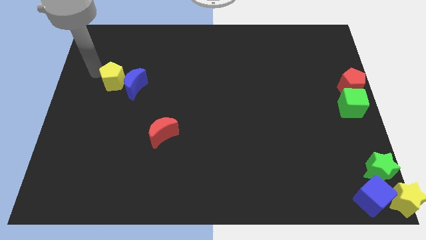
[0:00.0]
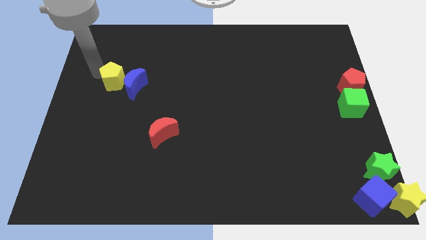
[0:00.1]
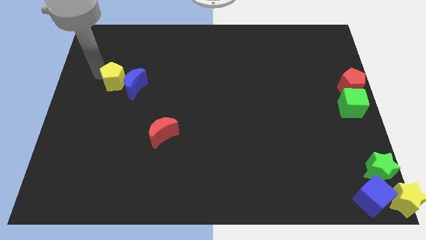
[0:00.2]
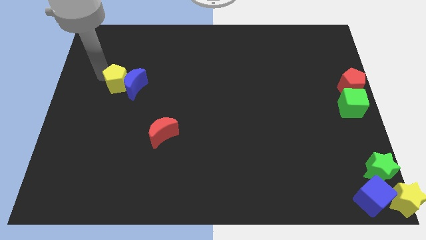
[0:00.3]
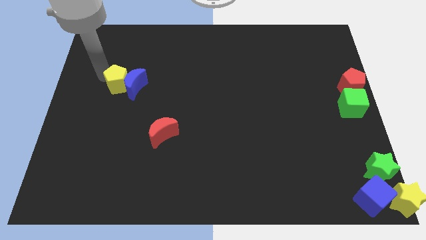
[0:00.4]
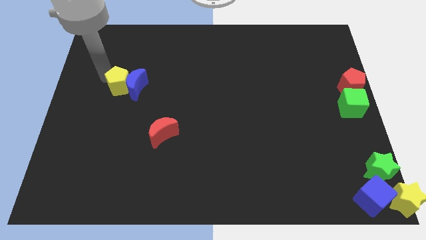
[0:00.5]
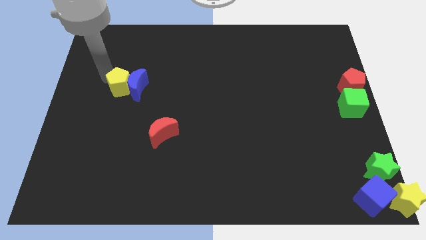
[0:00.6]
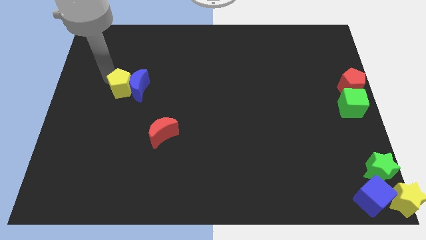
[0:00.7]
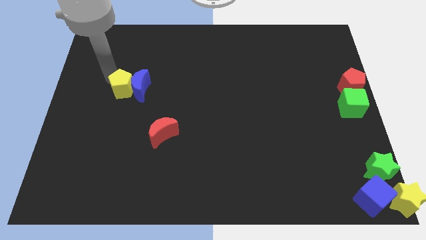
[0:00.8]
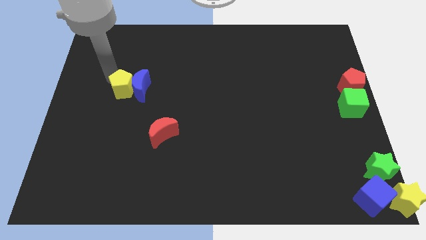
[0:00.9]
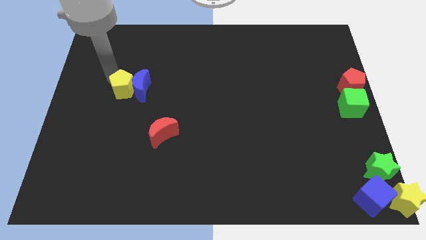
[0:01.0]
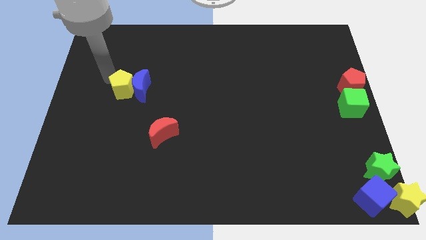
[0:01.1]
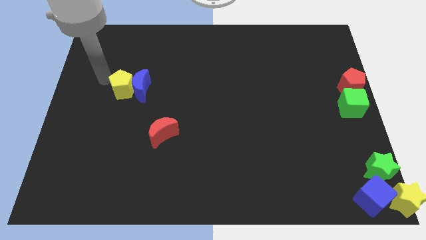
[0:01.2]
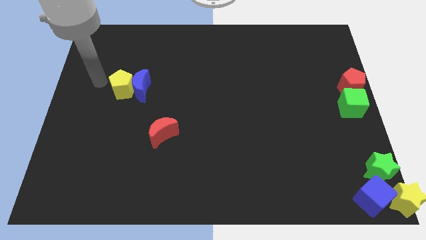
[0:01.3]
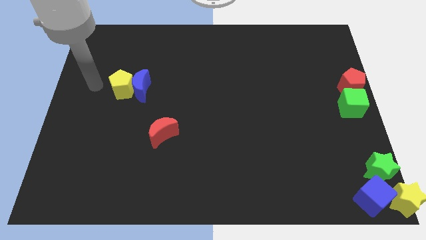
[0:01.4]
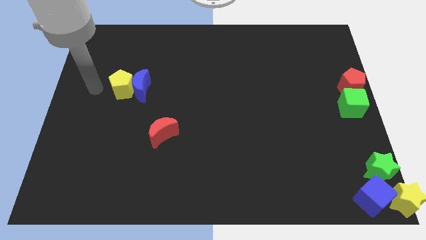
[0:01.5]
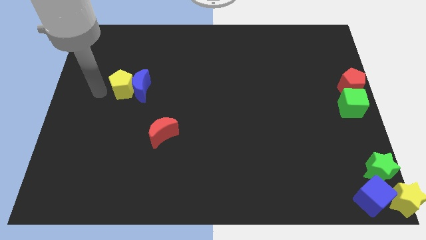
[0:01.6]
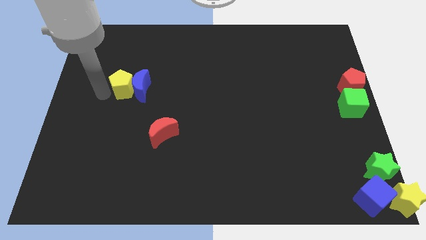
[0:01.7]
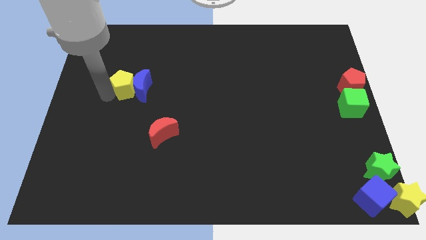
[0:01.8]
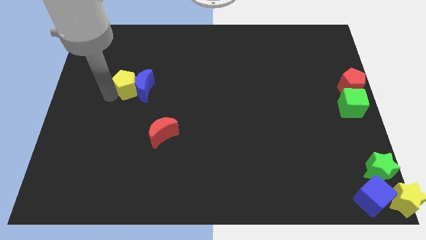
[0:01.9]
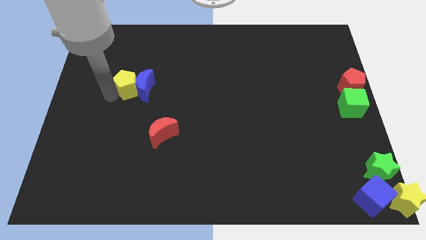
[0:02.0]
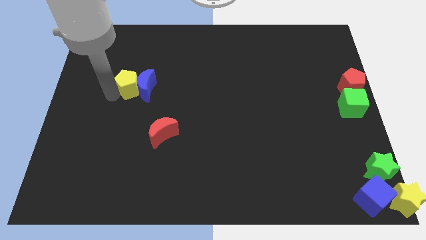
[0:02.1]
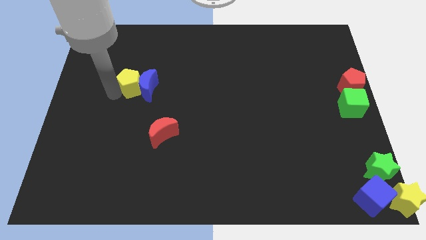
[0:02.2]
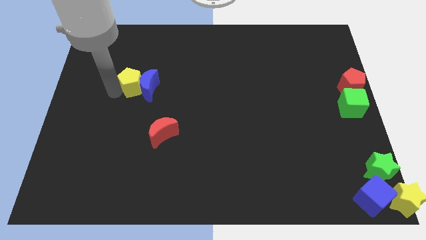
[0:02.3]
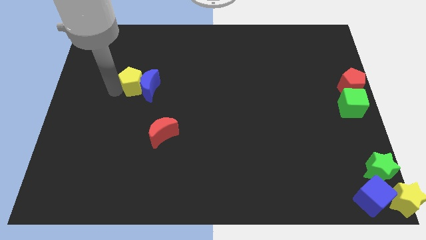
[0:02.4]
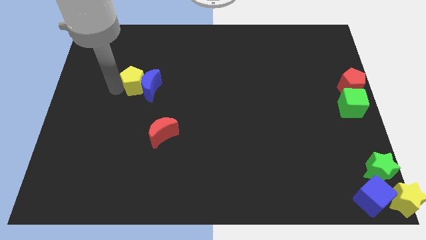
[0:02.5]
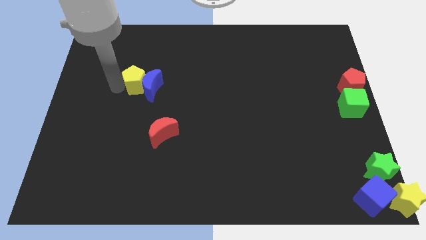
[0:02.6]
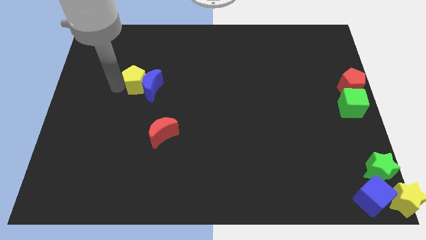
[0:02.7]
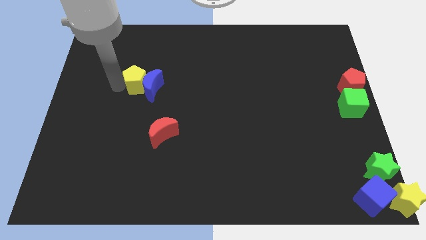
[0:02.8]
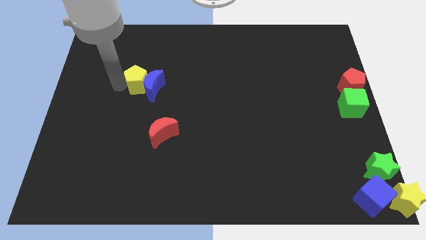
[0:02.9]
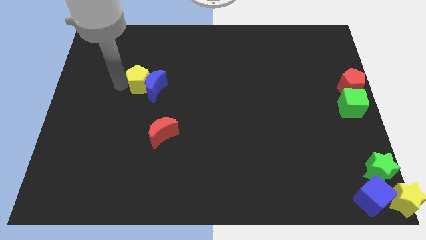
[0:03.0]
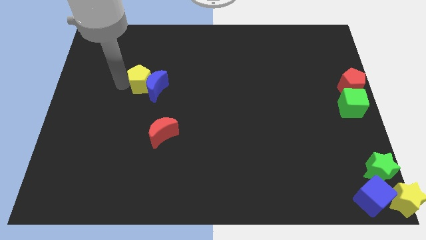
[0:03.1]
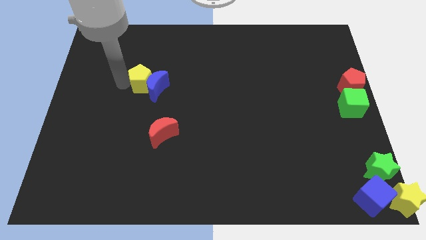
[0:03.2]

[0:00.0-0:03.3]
push yellow pentagon in to blue crescent

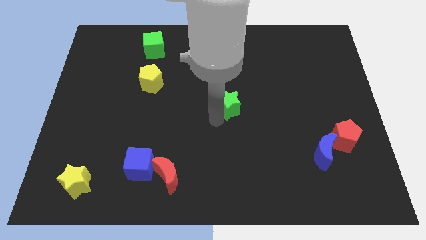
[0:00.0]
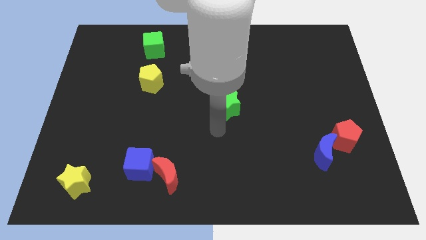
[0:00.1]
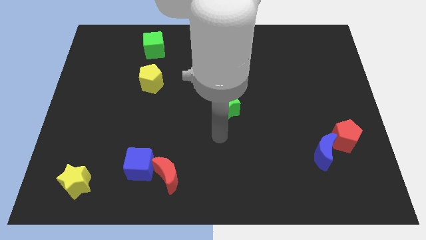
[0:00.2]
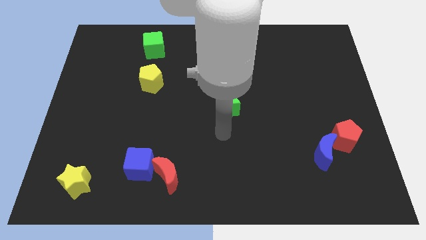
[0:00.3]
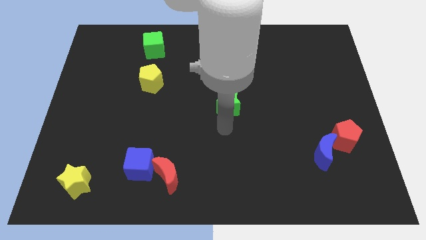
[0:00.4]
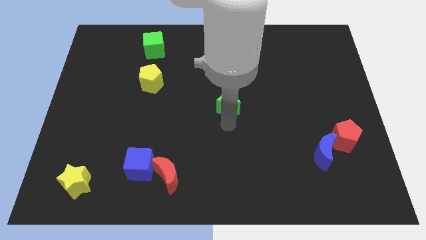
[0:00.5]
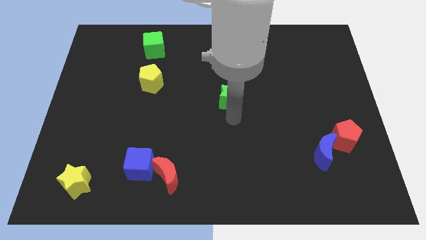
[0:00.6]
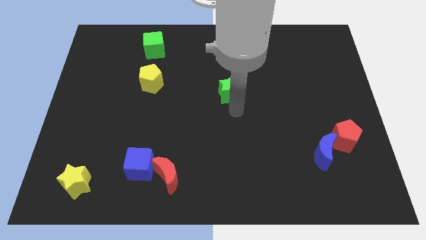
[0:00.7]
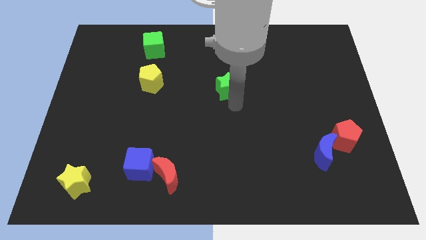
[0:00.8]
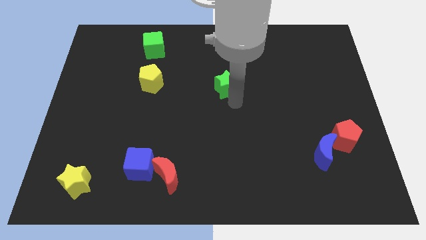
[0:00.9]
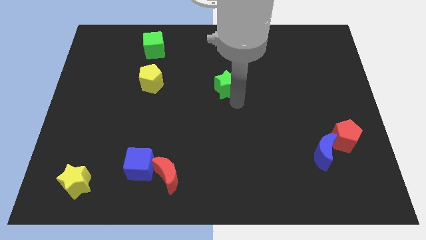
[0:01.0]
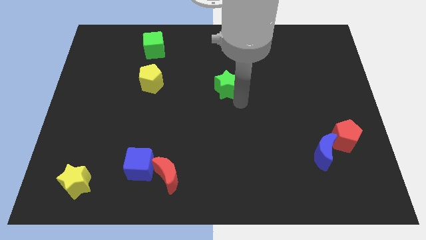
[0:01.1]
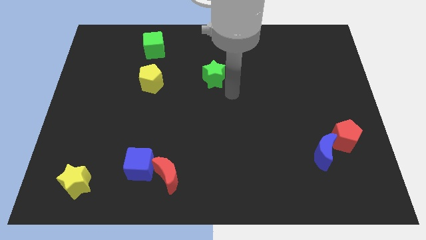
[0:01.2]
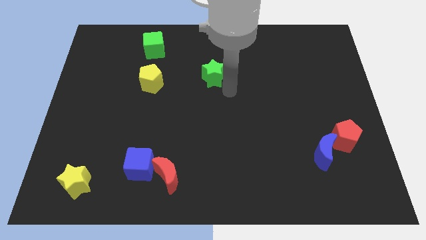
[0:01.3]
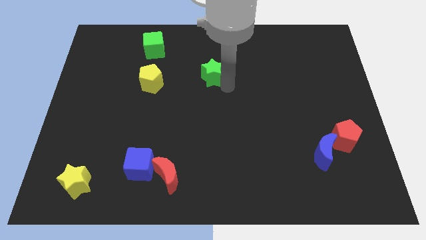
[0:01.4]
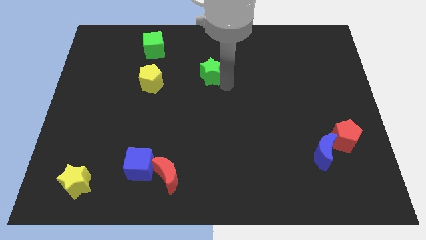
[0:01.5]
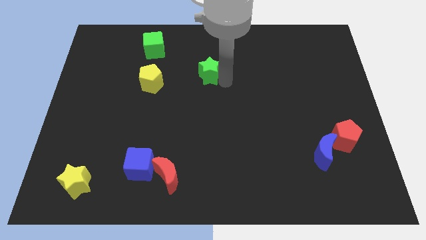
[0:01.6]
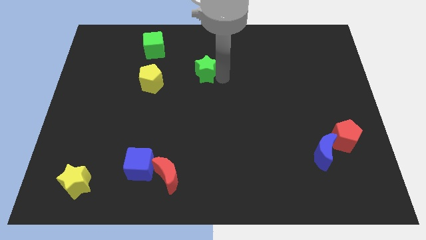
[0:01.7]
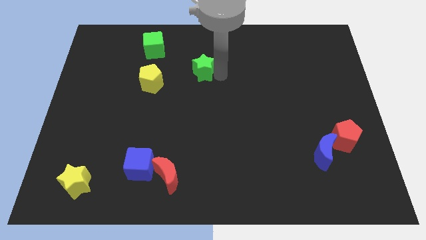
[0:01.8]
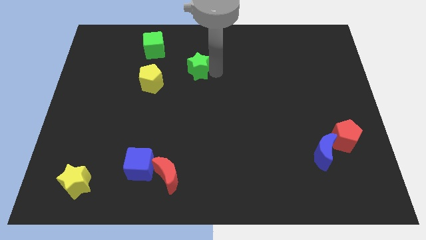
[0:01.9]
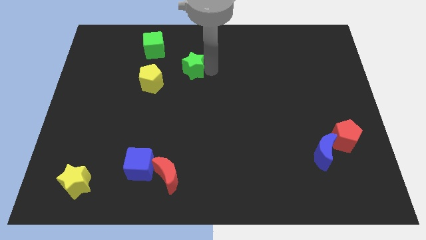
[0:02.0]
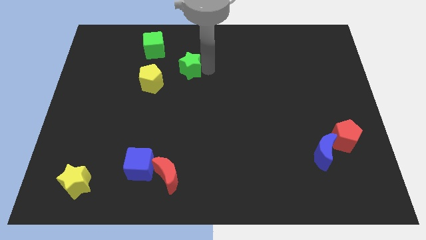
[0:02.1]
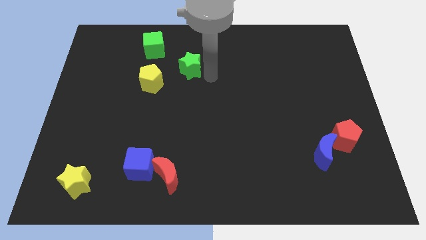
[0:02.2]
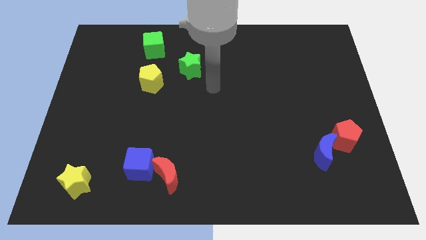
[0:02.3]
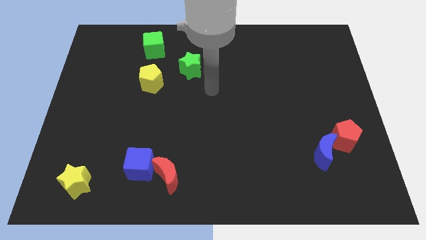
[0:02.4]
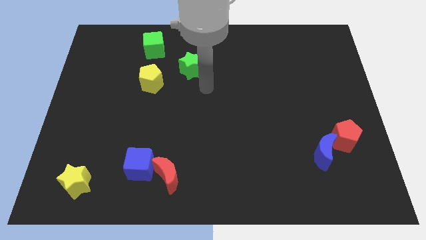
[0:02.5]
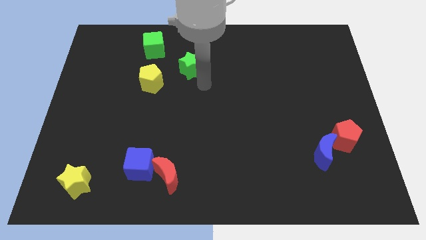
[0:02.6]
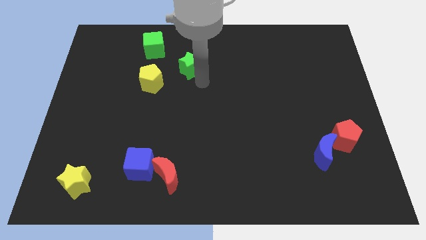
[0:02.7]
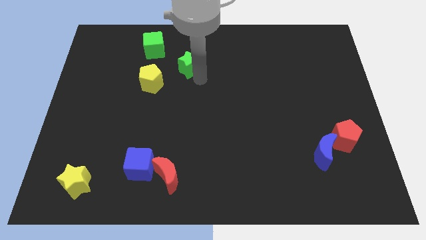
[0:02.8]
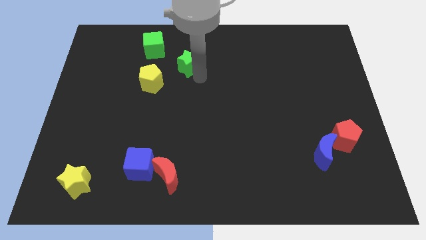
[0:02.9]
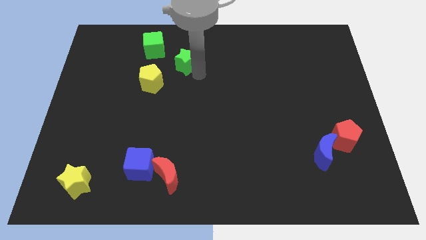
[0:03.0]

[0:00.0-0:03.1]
push green star diagonal to yellow pentagon

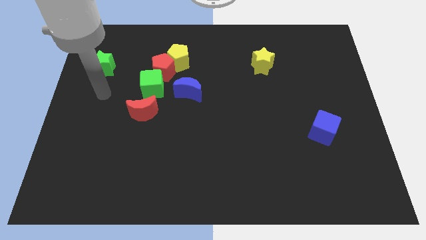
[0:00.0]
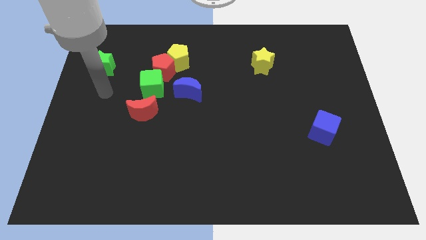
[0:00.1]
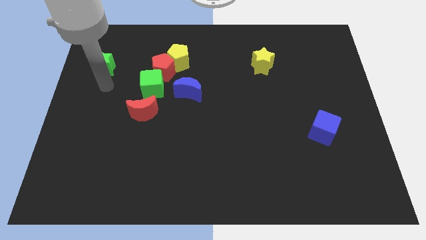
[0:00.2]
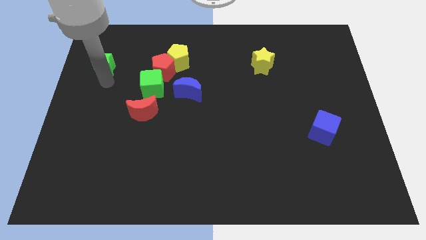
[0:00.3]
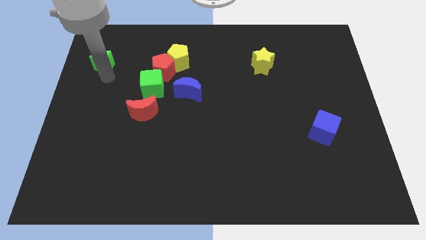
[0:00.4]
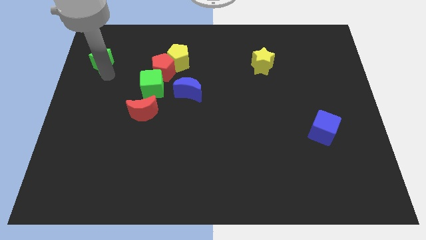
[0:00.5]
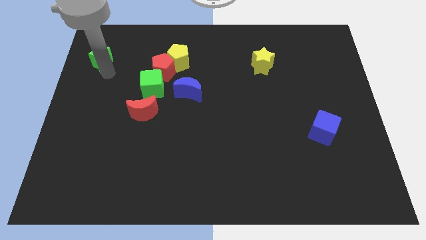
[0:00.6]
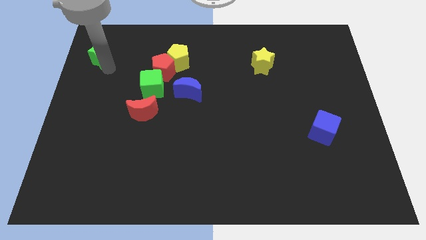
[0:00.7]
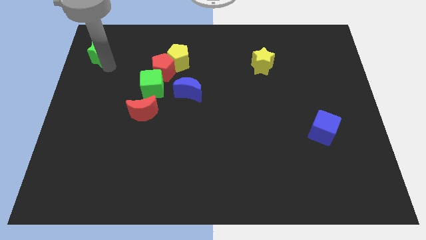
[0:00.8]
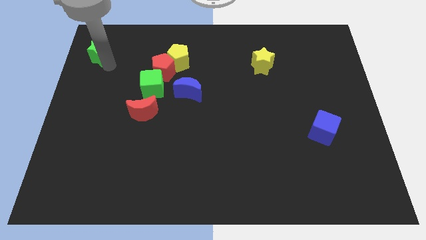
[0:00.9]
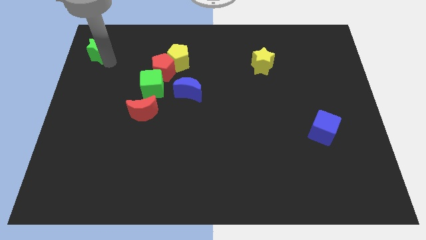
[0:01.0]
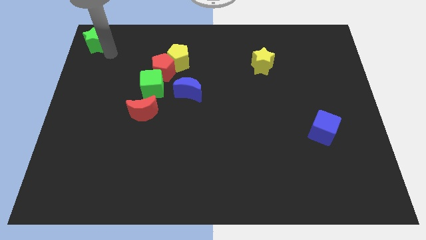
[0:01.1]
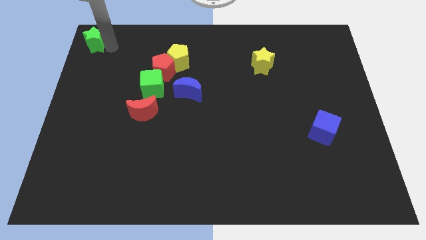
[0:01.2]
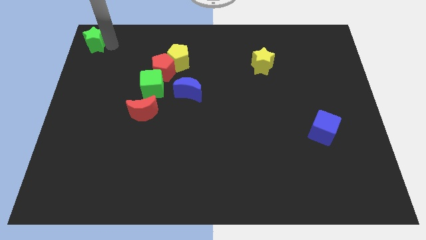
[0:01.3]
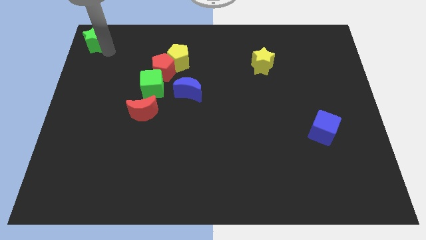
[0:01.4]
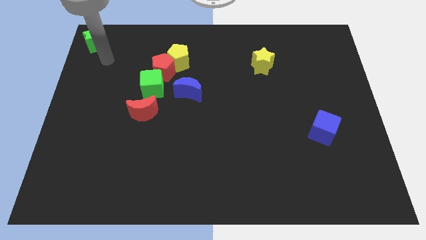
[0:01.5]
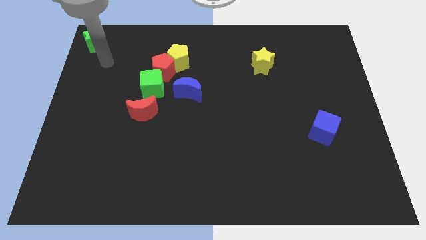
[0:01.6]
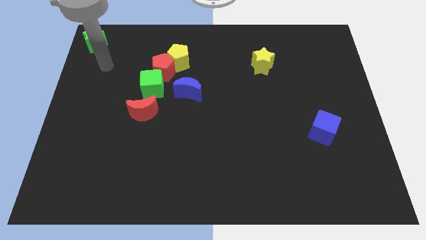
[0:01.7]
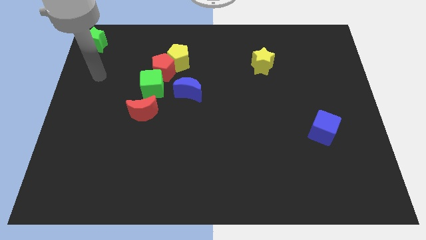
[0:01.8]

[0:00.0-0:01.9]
move the green star to the top left on the board

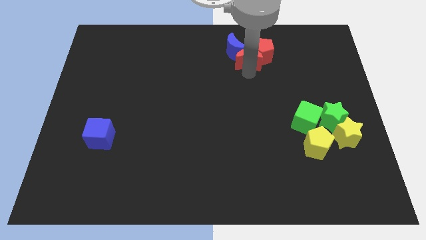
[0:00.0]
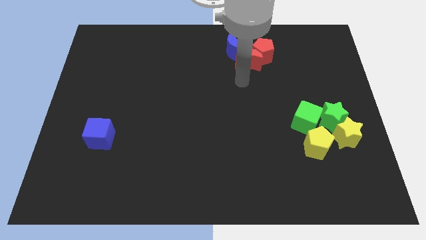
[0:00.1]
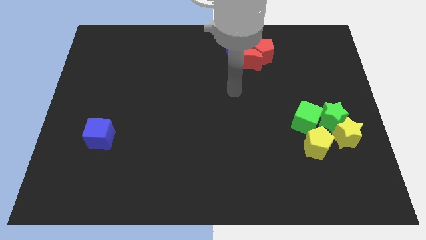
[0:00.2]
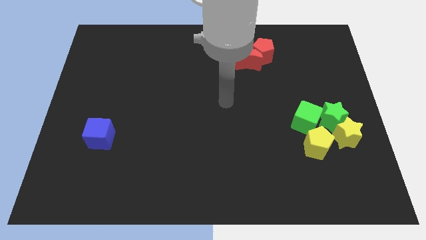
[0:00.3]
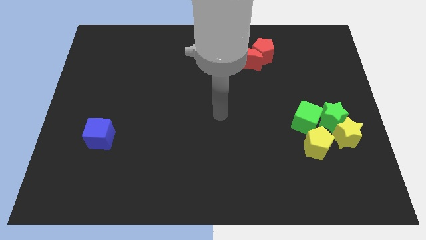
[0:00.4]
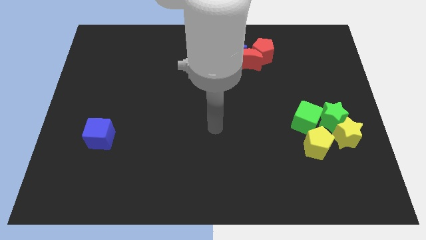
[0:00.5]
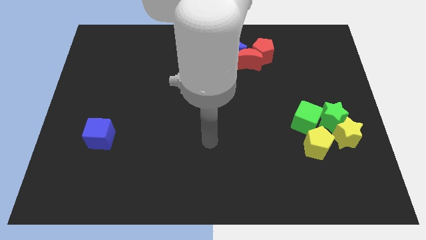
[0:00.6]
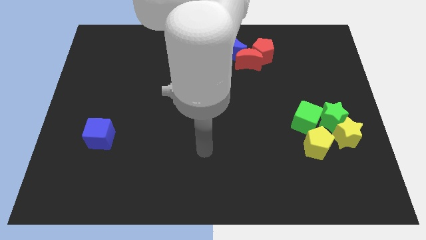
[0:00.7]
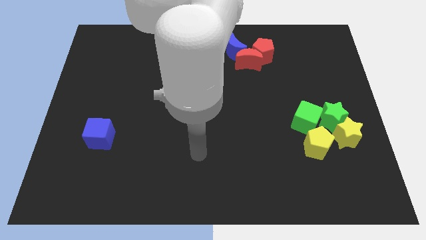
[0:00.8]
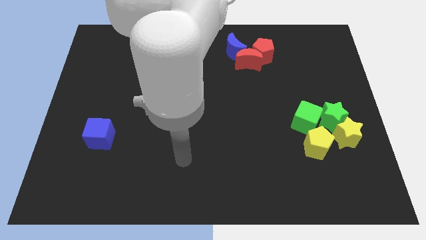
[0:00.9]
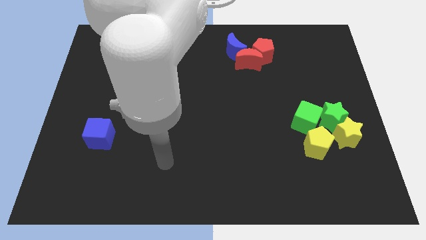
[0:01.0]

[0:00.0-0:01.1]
move your hand away from the bottom side of the red moon
